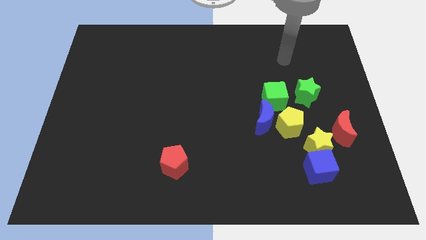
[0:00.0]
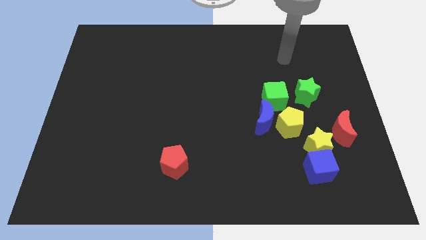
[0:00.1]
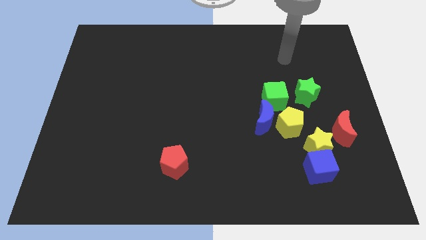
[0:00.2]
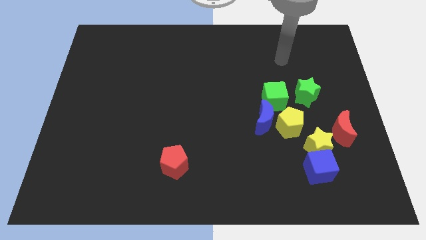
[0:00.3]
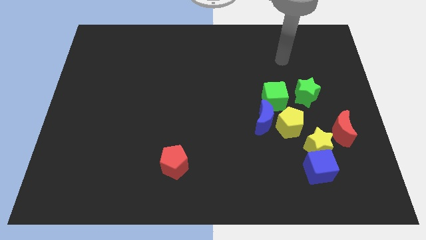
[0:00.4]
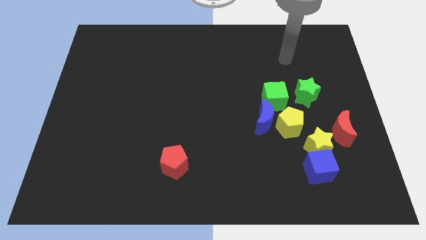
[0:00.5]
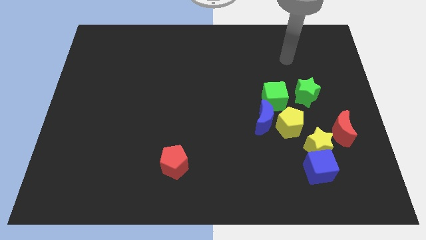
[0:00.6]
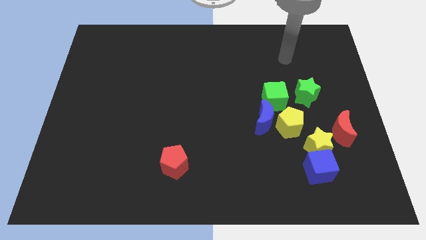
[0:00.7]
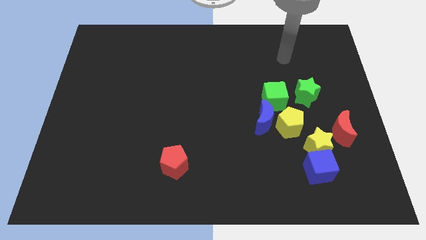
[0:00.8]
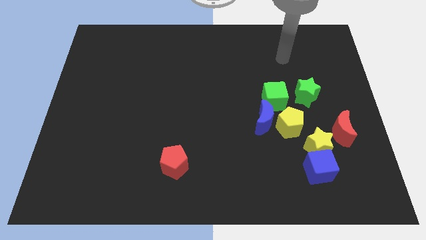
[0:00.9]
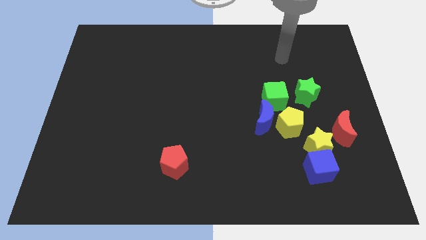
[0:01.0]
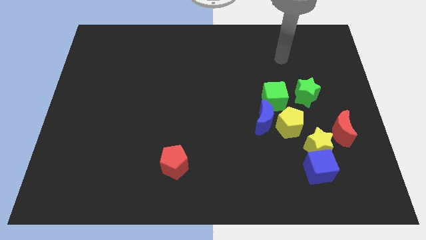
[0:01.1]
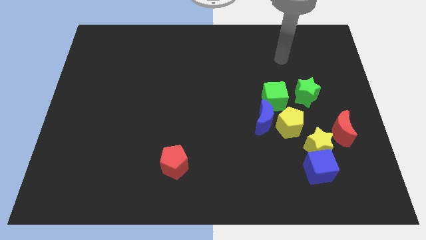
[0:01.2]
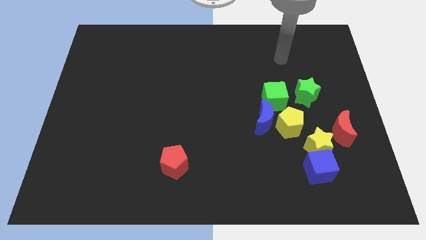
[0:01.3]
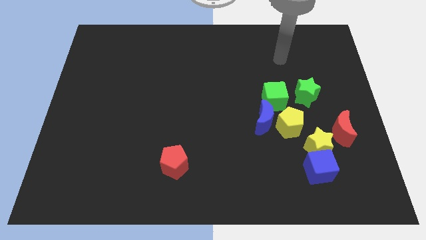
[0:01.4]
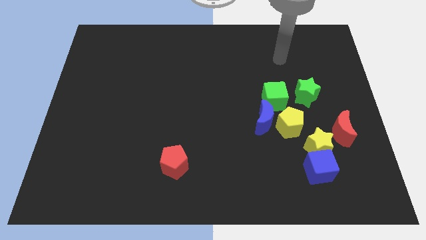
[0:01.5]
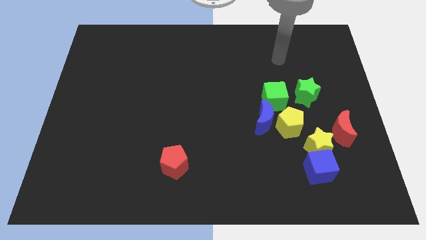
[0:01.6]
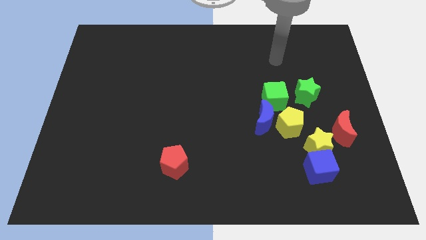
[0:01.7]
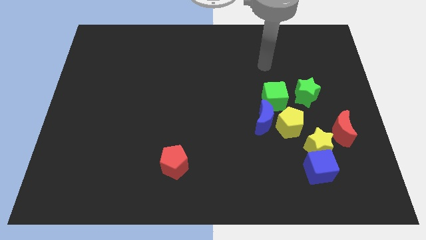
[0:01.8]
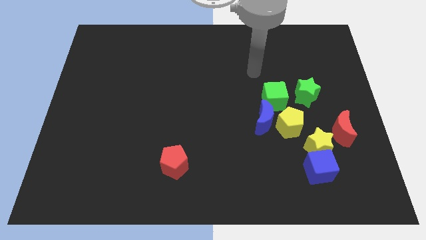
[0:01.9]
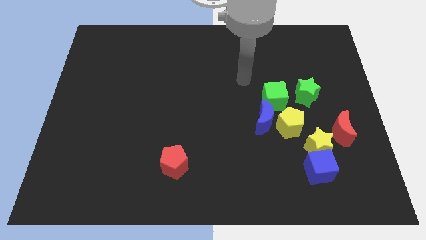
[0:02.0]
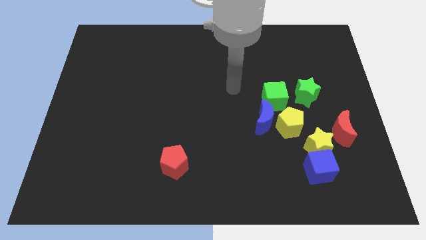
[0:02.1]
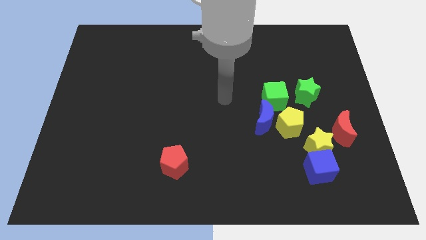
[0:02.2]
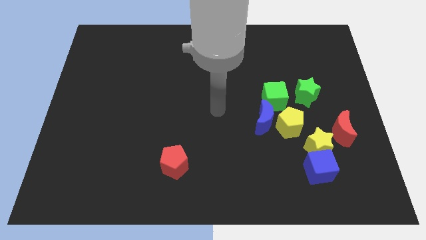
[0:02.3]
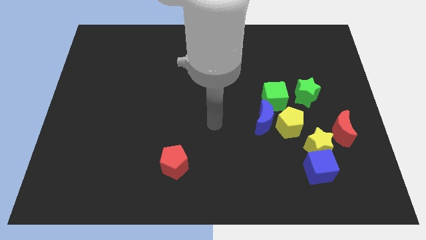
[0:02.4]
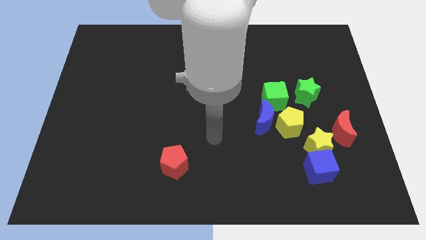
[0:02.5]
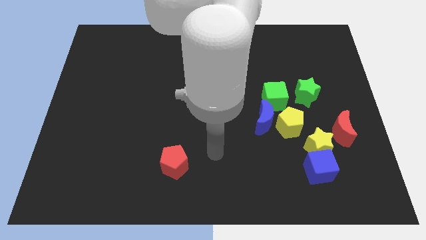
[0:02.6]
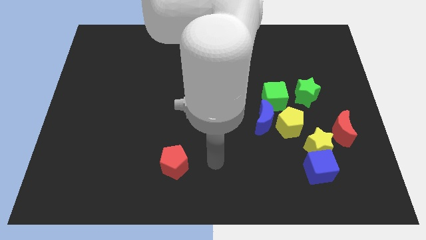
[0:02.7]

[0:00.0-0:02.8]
move the arm to the right of the red pentagon

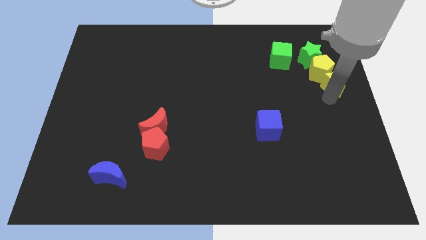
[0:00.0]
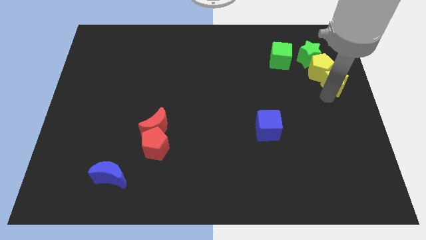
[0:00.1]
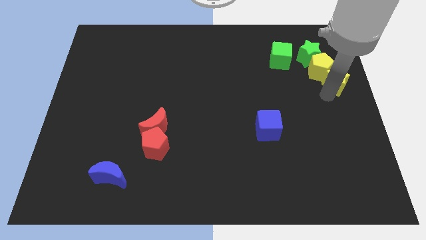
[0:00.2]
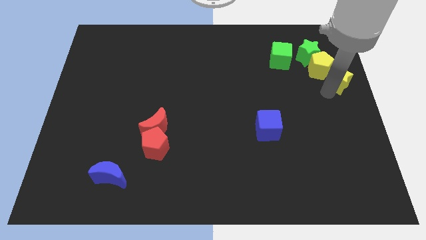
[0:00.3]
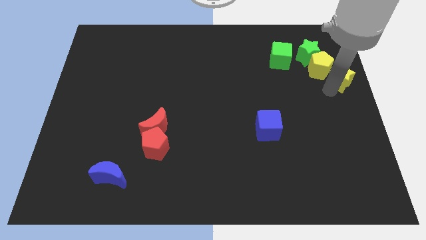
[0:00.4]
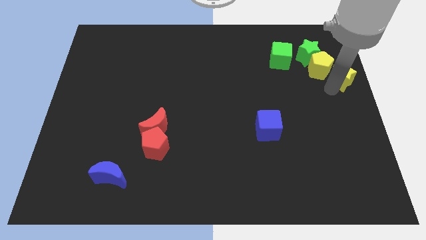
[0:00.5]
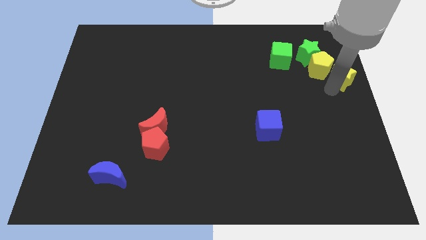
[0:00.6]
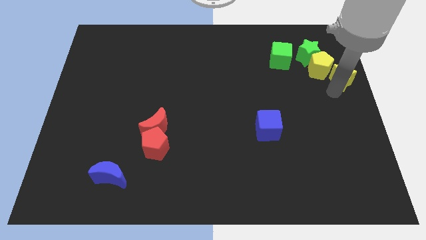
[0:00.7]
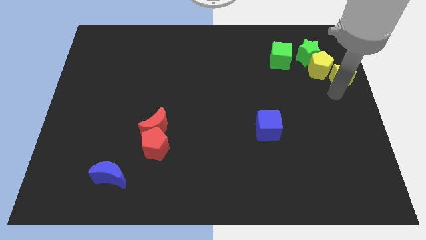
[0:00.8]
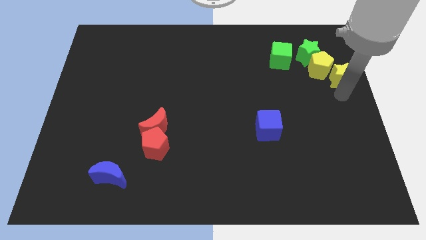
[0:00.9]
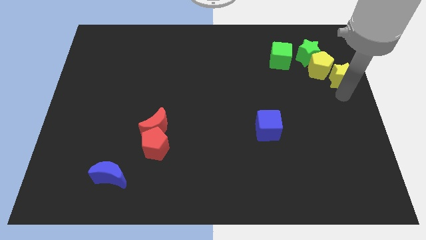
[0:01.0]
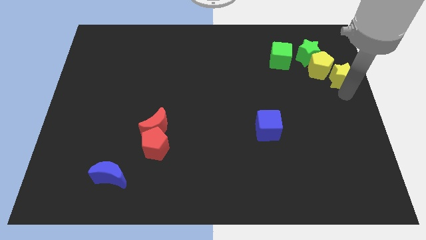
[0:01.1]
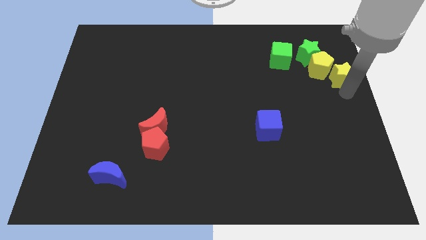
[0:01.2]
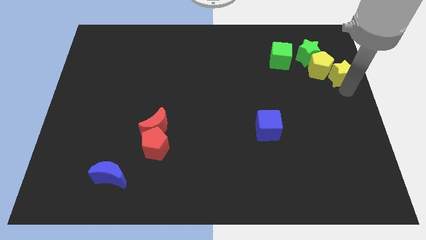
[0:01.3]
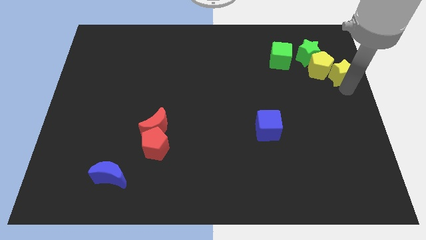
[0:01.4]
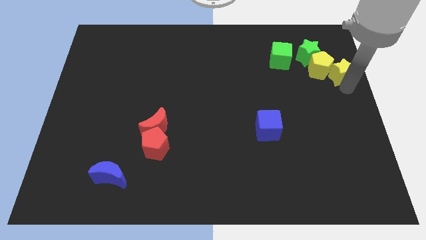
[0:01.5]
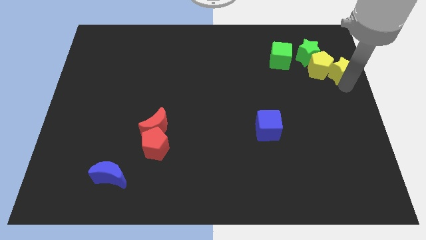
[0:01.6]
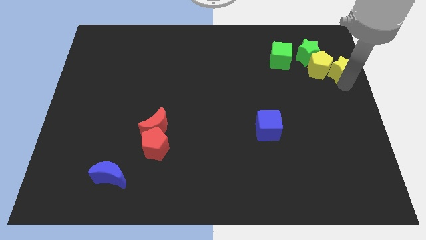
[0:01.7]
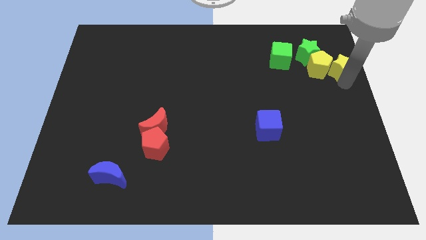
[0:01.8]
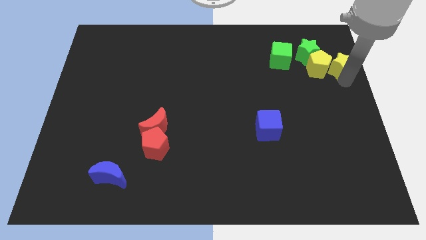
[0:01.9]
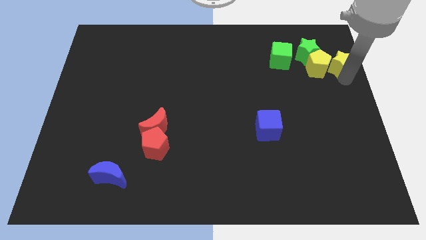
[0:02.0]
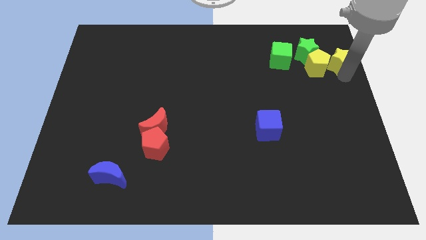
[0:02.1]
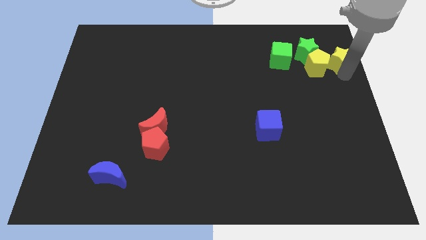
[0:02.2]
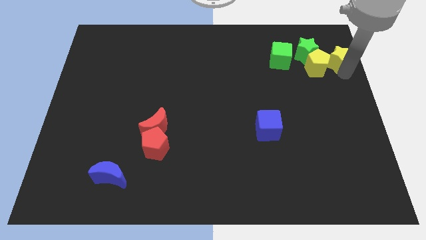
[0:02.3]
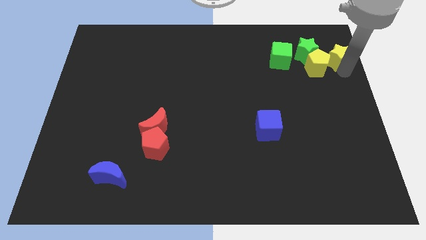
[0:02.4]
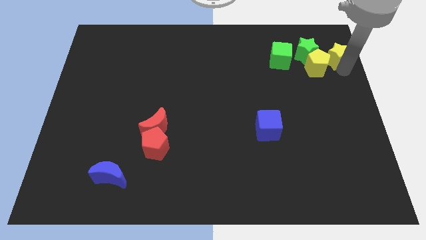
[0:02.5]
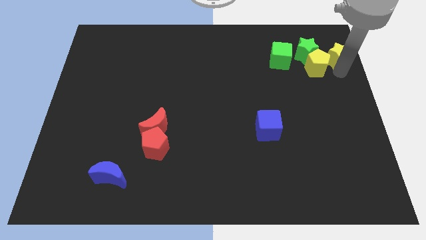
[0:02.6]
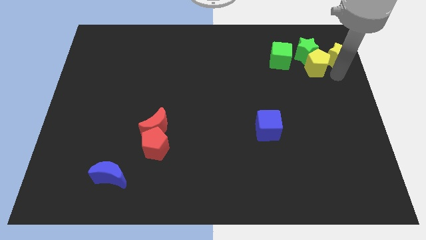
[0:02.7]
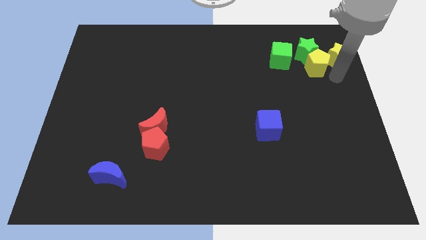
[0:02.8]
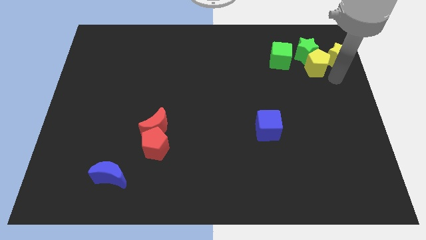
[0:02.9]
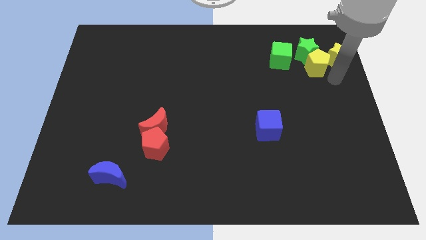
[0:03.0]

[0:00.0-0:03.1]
move the yellow star on the right side of the yellow pentagon

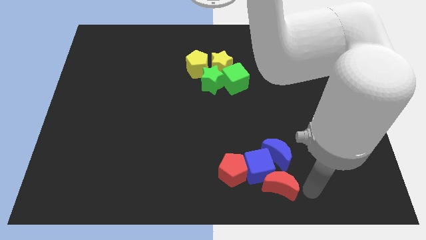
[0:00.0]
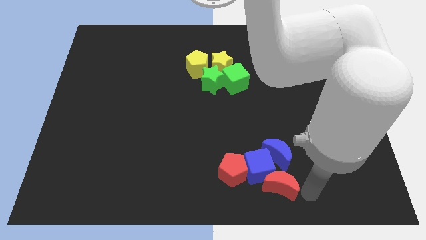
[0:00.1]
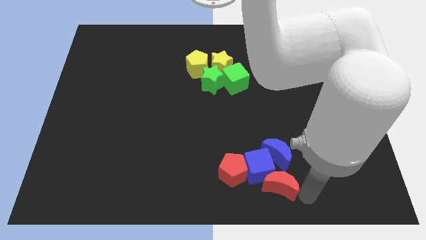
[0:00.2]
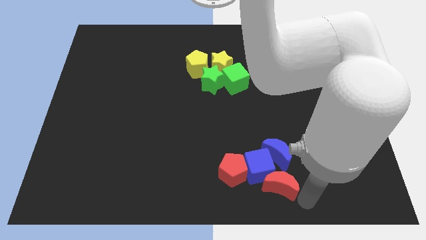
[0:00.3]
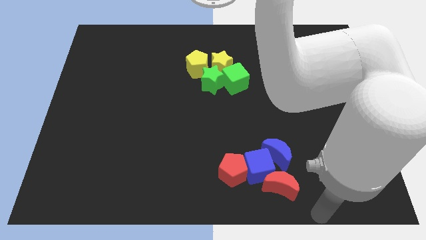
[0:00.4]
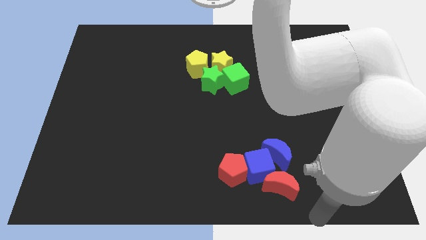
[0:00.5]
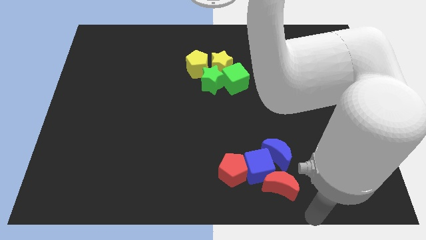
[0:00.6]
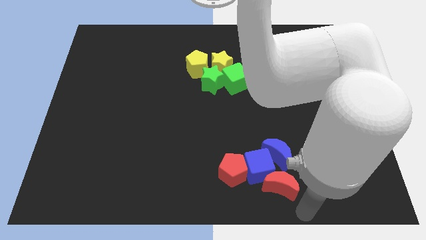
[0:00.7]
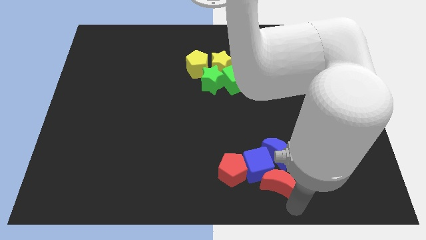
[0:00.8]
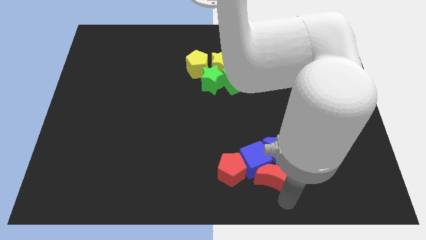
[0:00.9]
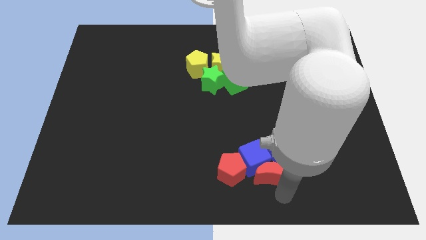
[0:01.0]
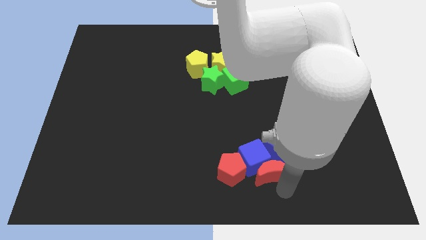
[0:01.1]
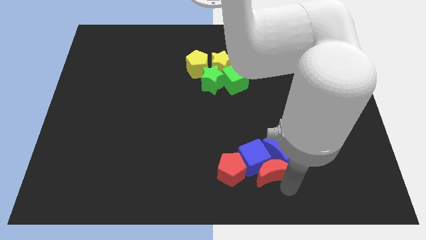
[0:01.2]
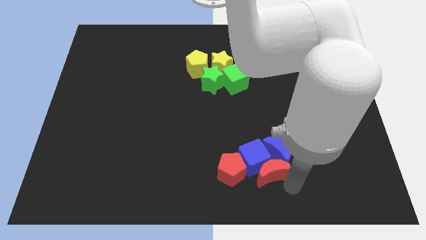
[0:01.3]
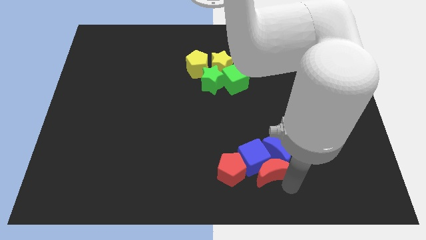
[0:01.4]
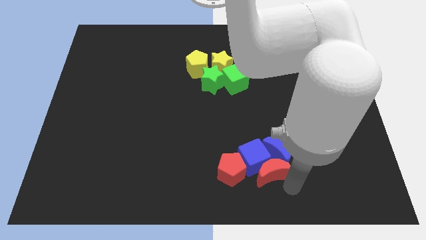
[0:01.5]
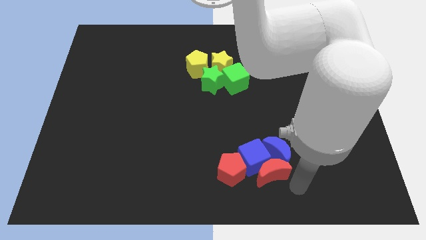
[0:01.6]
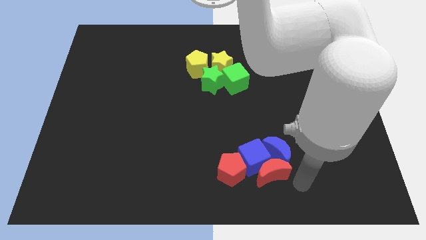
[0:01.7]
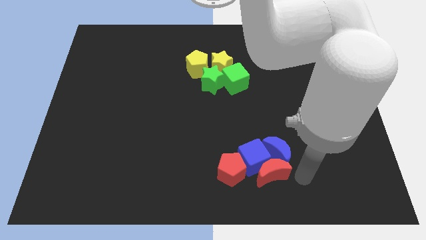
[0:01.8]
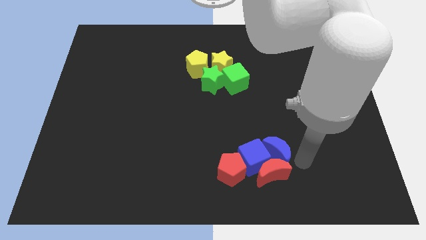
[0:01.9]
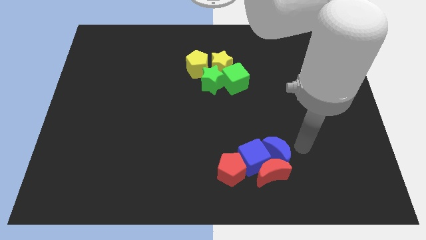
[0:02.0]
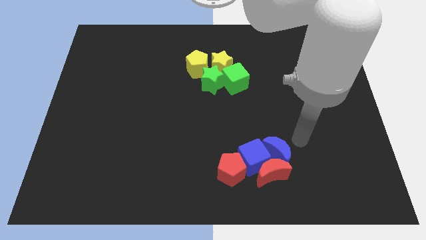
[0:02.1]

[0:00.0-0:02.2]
push the red crescent into the blue cube

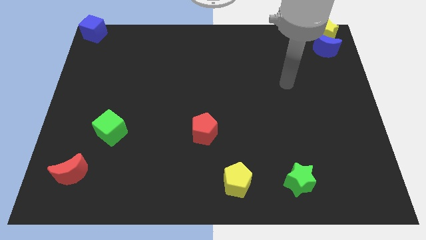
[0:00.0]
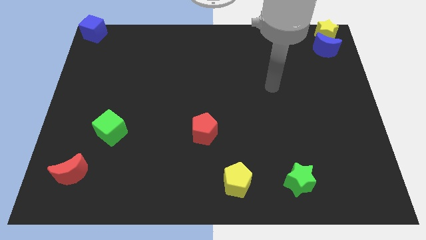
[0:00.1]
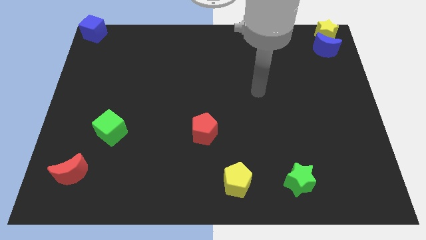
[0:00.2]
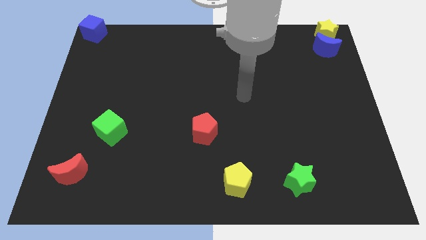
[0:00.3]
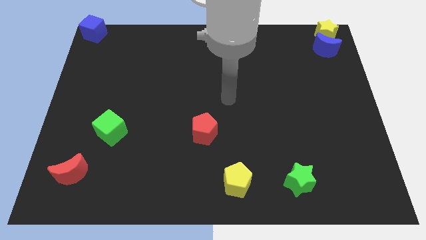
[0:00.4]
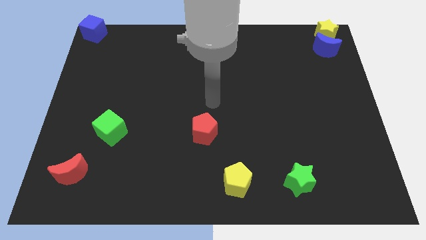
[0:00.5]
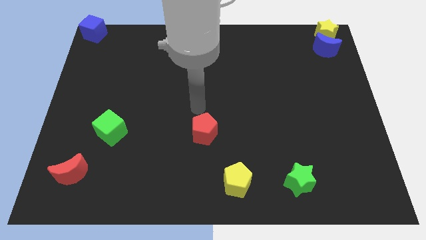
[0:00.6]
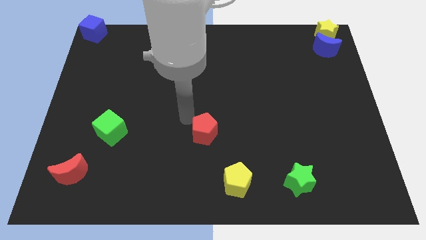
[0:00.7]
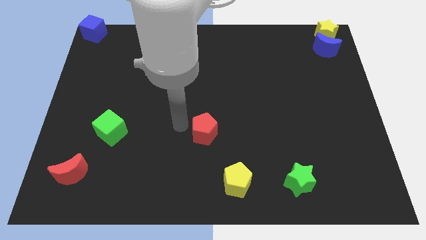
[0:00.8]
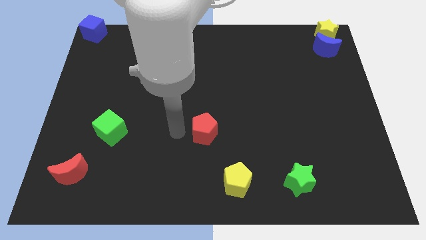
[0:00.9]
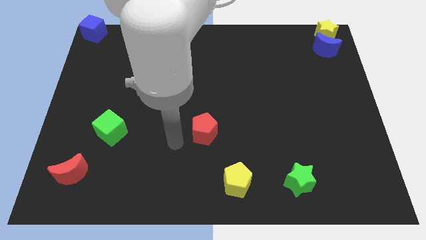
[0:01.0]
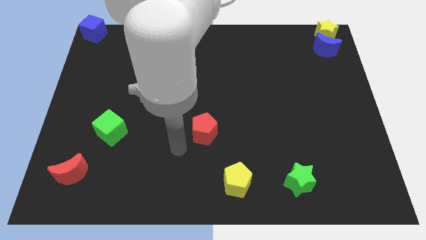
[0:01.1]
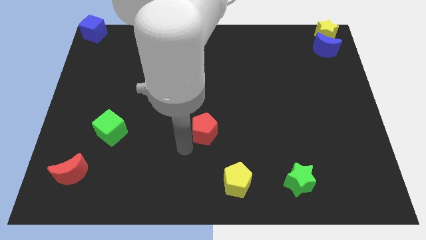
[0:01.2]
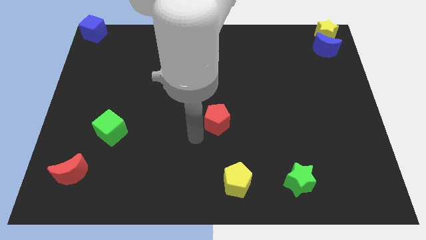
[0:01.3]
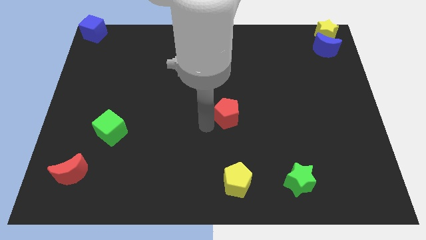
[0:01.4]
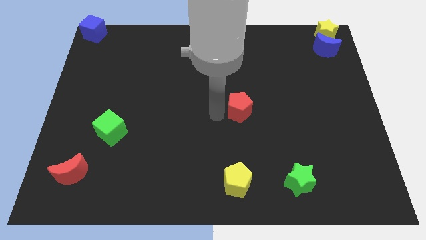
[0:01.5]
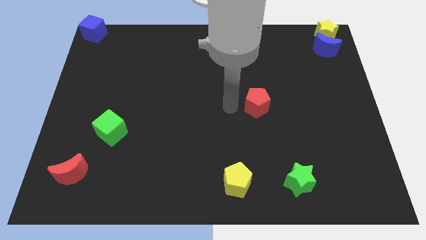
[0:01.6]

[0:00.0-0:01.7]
place the red pentagon vertically above the yellow pentagon
